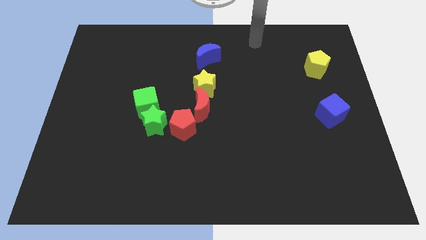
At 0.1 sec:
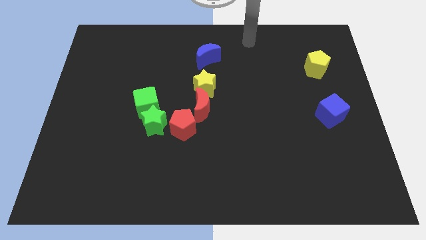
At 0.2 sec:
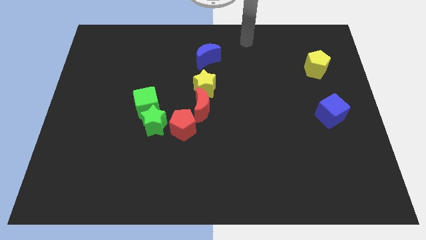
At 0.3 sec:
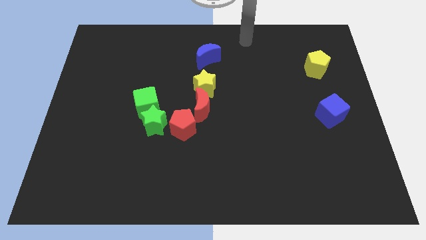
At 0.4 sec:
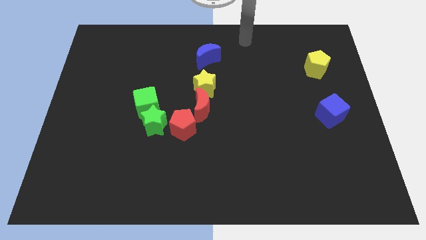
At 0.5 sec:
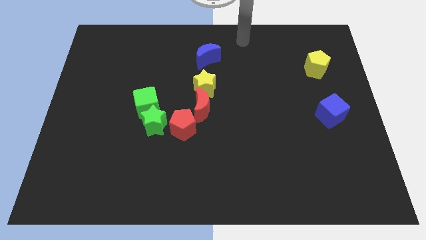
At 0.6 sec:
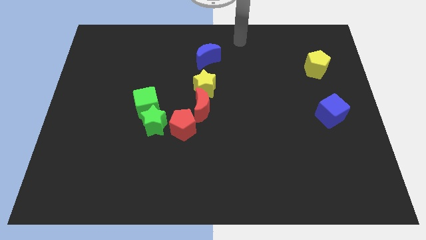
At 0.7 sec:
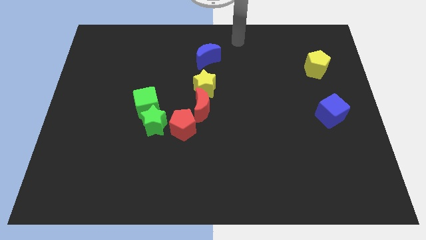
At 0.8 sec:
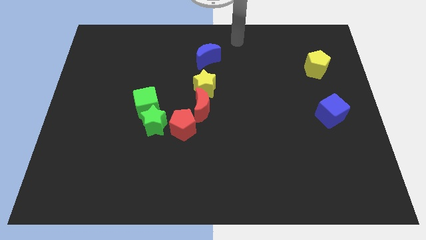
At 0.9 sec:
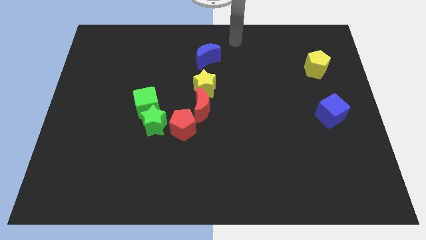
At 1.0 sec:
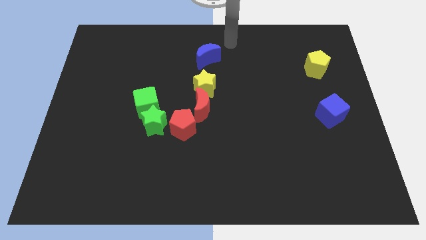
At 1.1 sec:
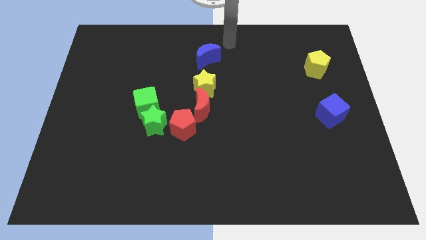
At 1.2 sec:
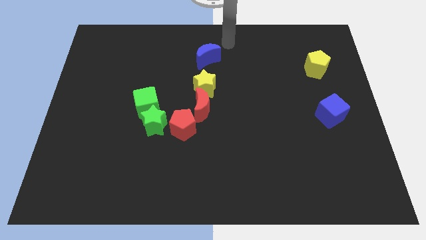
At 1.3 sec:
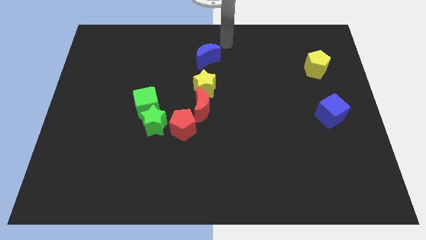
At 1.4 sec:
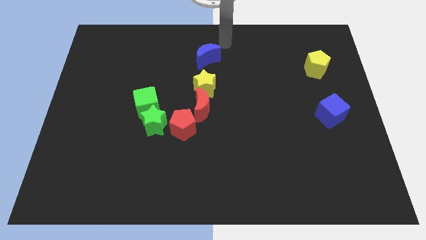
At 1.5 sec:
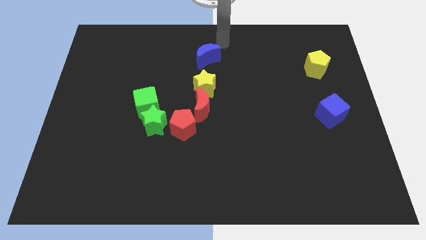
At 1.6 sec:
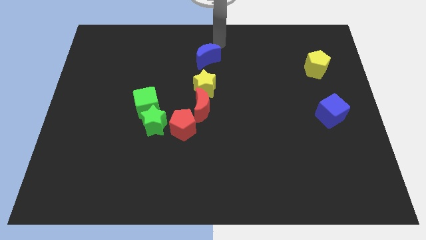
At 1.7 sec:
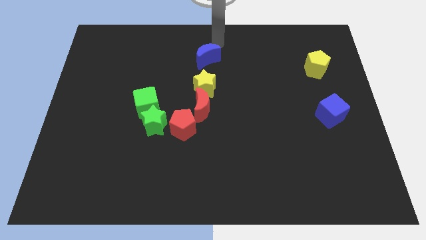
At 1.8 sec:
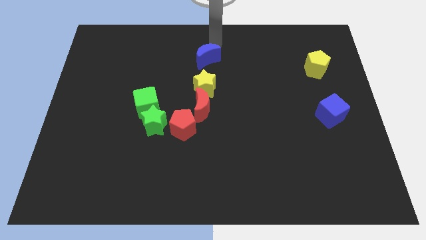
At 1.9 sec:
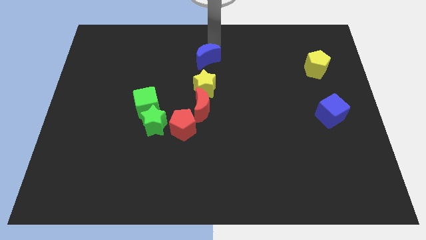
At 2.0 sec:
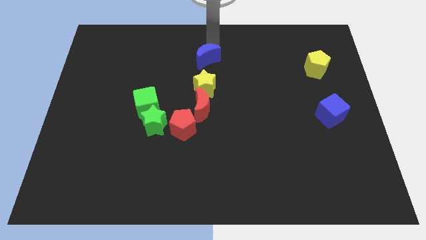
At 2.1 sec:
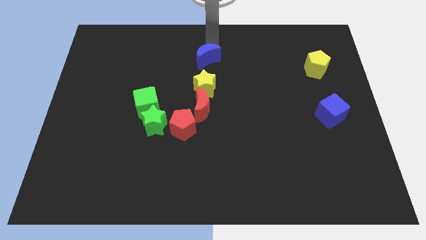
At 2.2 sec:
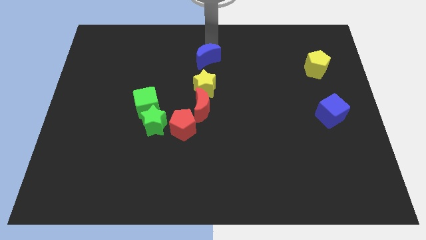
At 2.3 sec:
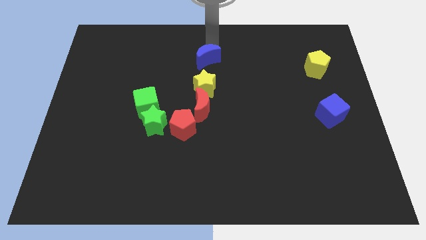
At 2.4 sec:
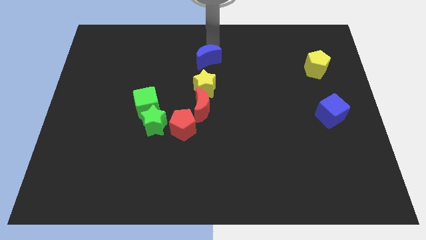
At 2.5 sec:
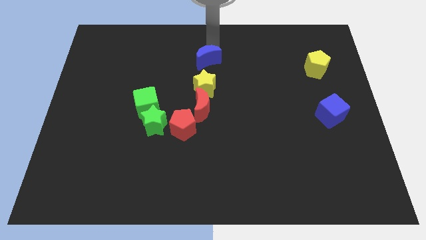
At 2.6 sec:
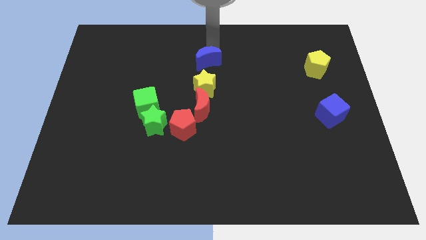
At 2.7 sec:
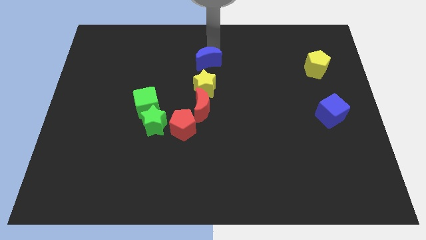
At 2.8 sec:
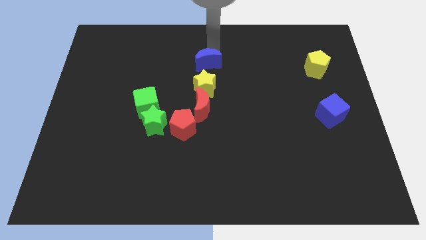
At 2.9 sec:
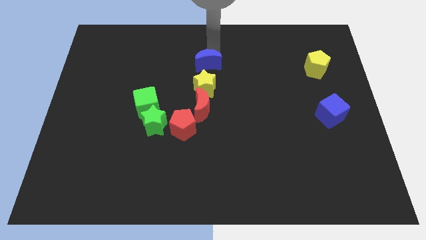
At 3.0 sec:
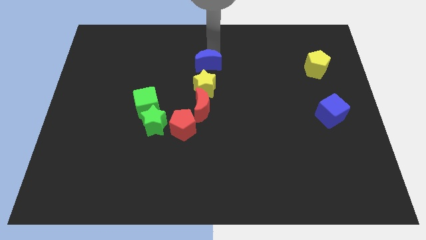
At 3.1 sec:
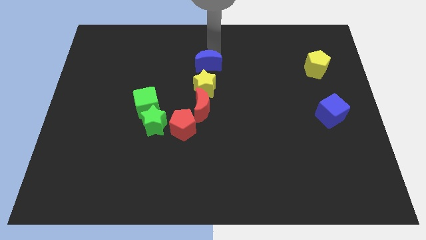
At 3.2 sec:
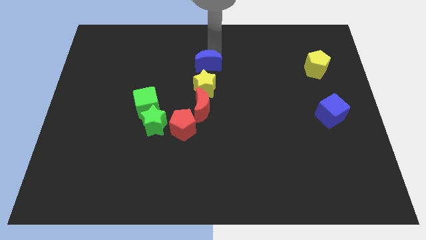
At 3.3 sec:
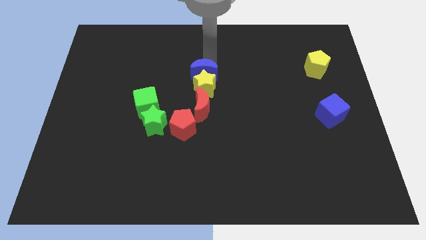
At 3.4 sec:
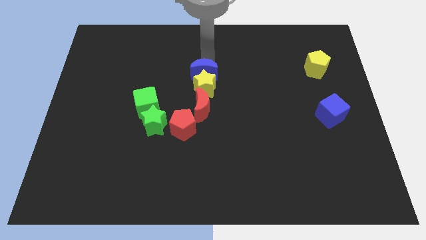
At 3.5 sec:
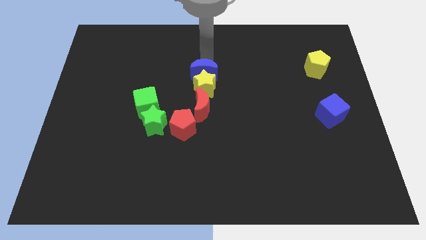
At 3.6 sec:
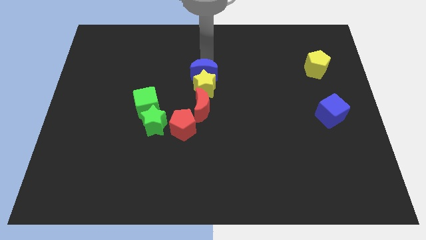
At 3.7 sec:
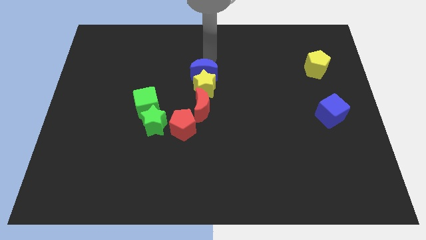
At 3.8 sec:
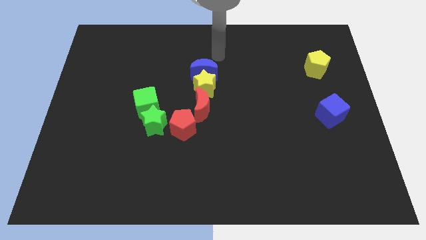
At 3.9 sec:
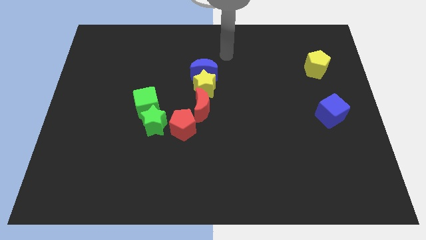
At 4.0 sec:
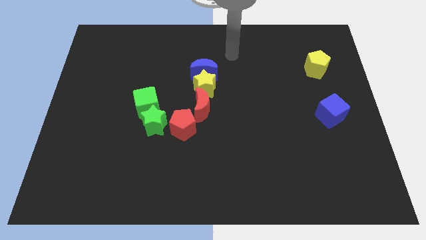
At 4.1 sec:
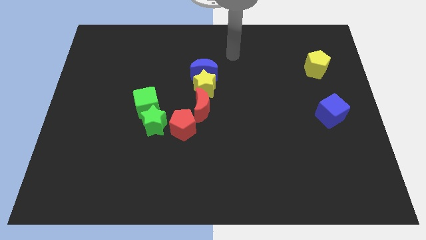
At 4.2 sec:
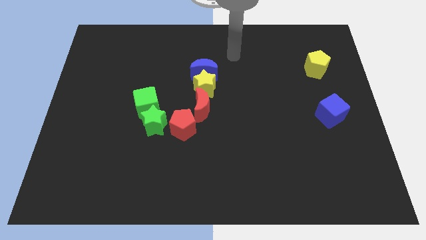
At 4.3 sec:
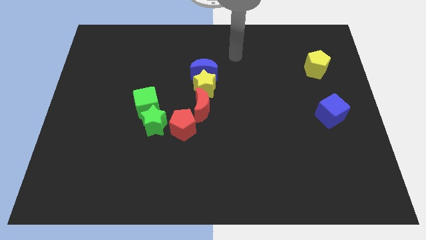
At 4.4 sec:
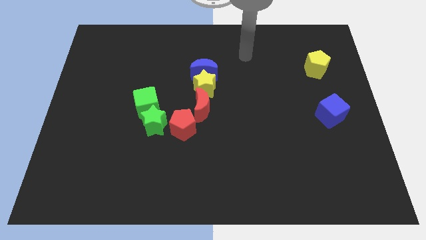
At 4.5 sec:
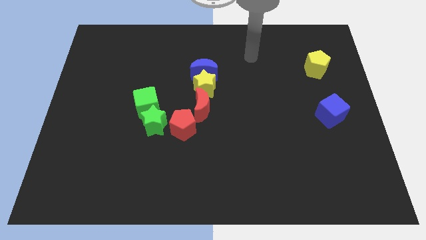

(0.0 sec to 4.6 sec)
slightly move the blue moon to the top of the yellow star

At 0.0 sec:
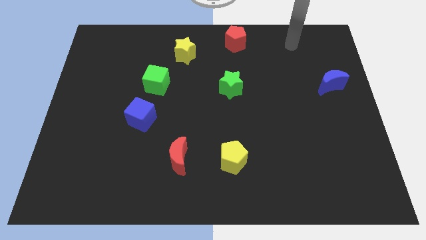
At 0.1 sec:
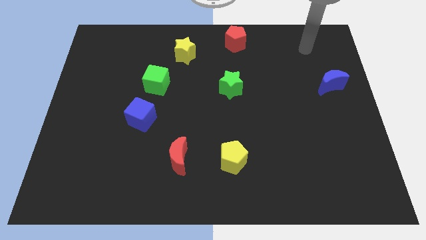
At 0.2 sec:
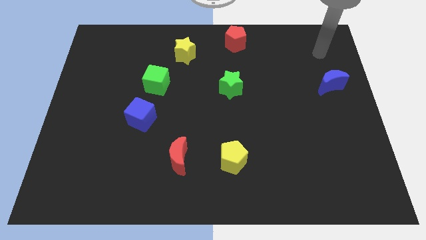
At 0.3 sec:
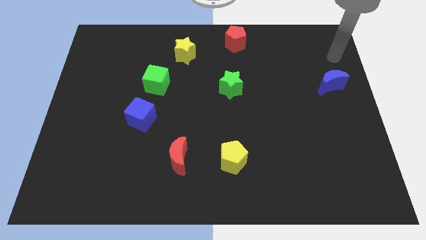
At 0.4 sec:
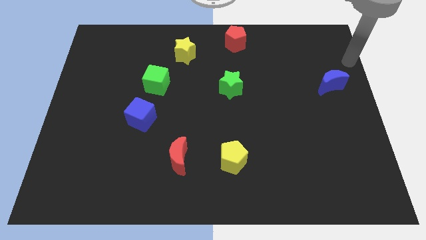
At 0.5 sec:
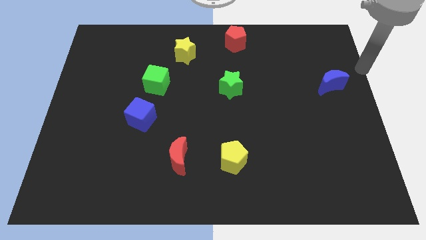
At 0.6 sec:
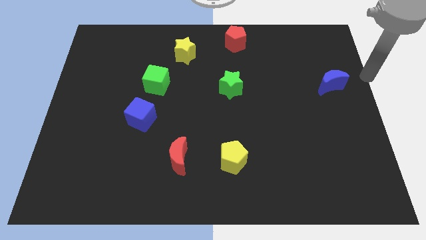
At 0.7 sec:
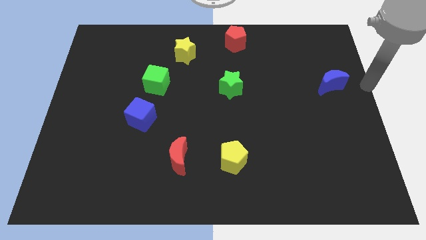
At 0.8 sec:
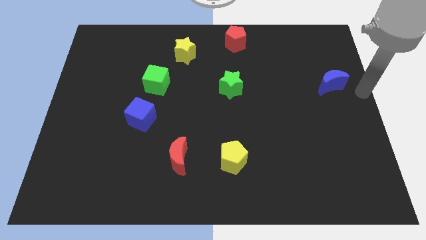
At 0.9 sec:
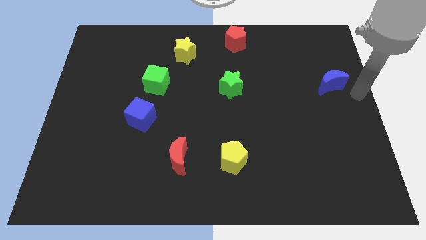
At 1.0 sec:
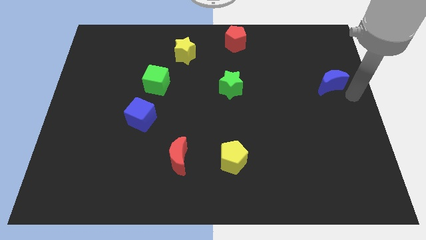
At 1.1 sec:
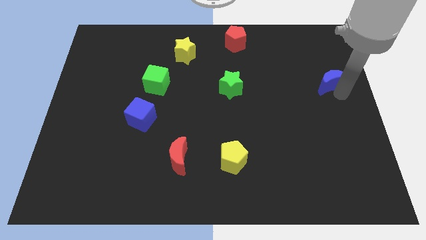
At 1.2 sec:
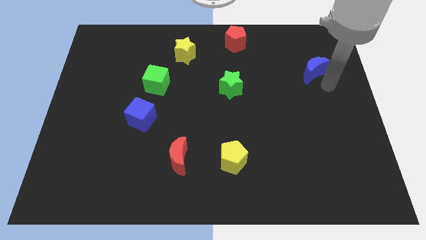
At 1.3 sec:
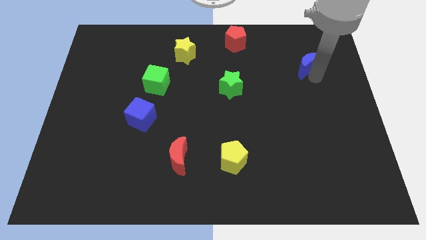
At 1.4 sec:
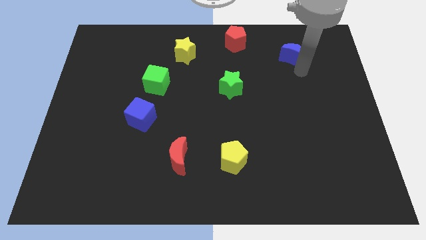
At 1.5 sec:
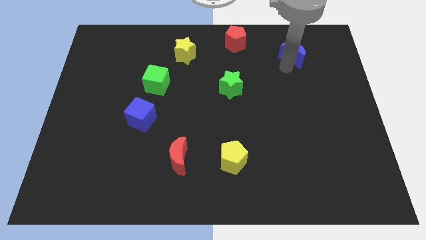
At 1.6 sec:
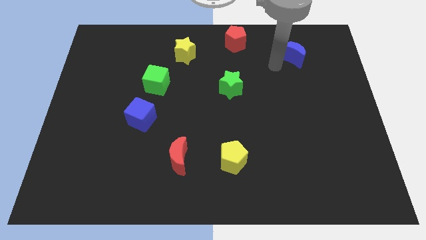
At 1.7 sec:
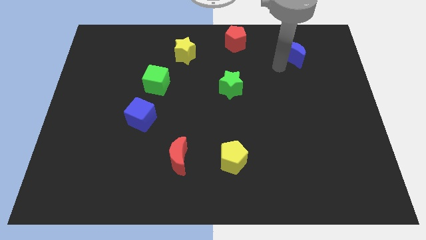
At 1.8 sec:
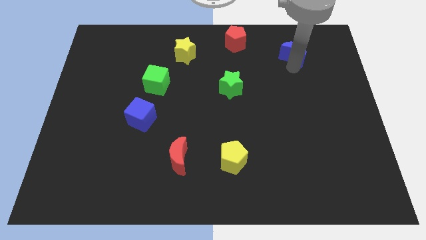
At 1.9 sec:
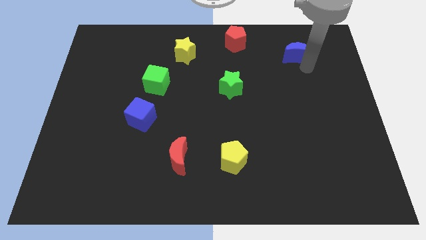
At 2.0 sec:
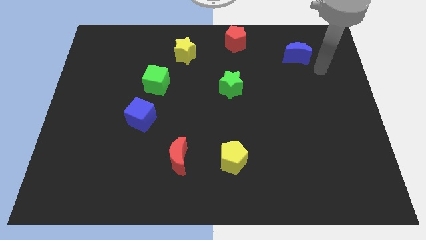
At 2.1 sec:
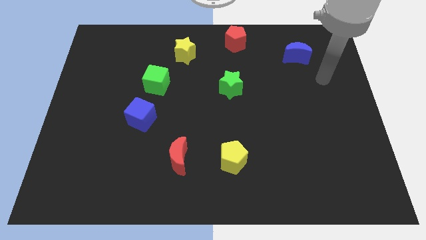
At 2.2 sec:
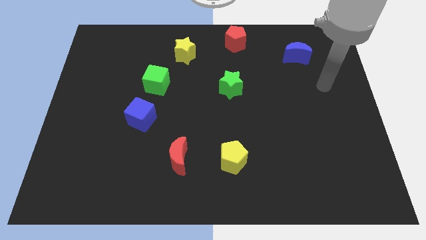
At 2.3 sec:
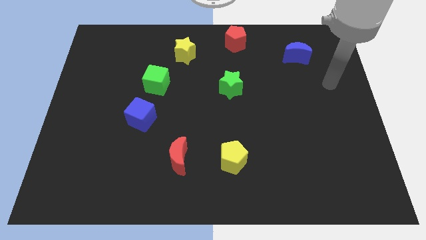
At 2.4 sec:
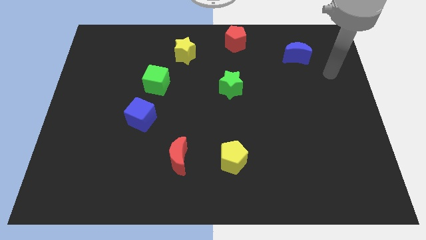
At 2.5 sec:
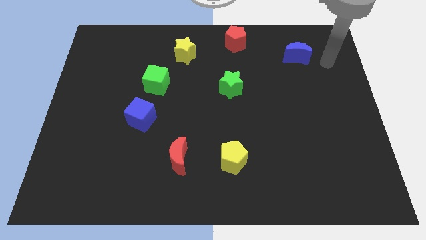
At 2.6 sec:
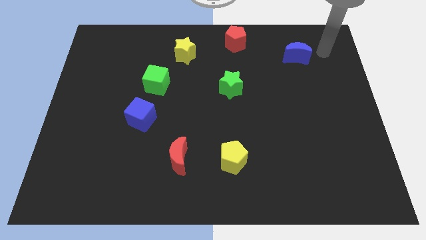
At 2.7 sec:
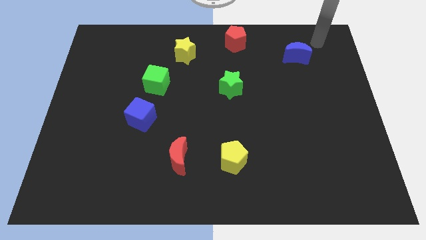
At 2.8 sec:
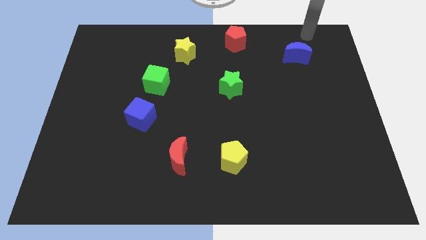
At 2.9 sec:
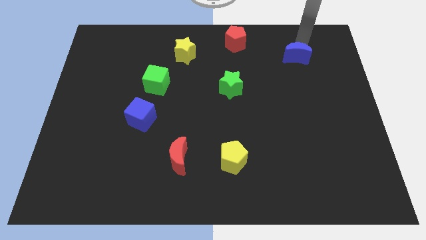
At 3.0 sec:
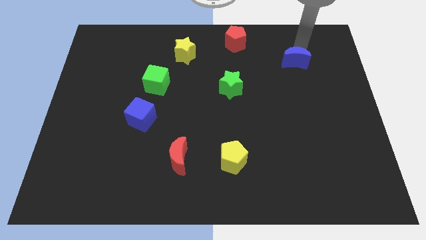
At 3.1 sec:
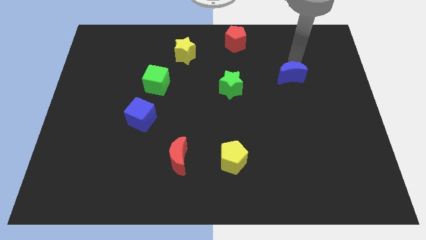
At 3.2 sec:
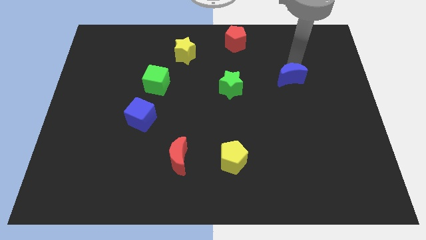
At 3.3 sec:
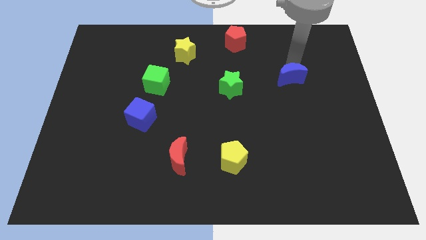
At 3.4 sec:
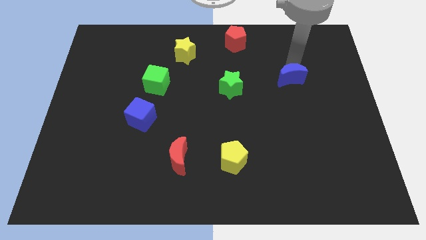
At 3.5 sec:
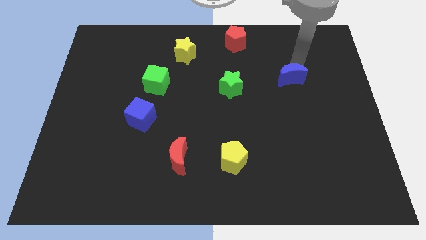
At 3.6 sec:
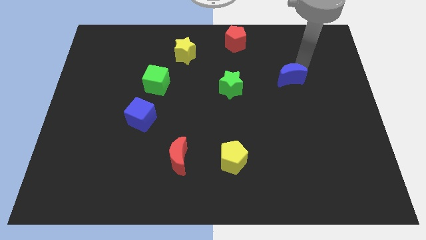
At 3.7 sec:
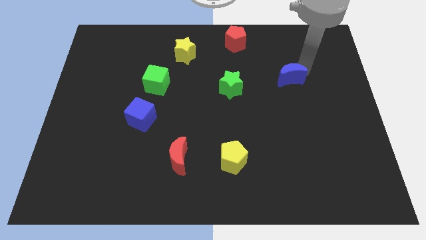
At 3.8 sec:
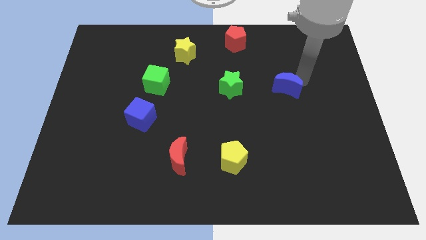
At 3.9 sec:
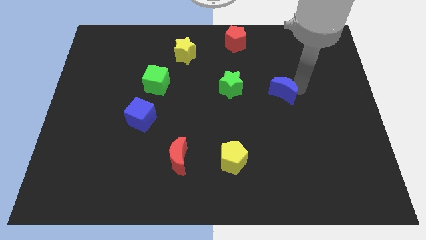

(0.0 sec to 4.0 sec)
place the blue moon right to the green star
